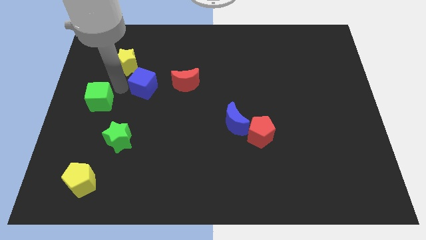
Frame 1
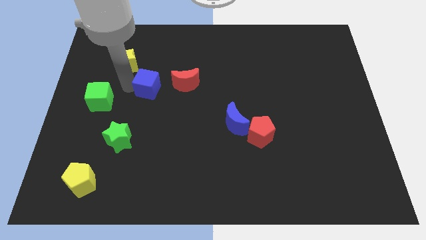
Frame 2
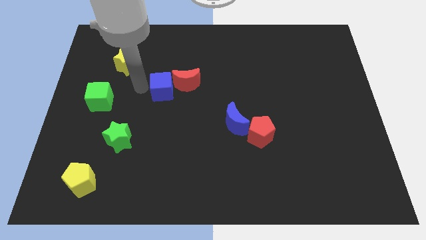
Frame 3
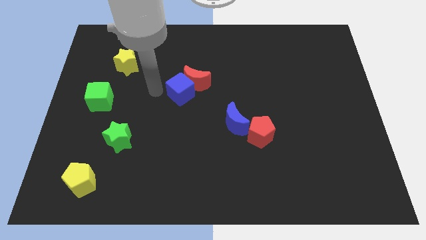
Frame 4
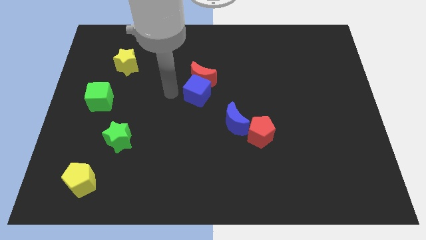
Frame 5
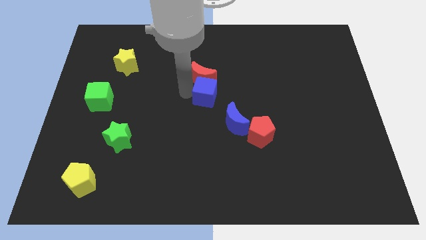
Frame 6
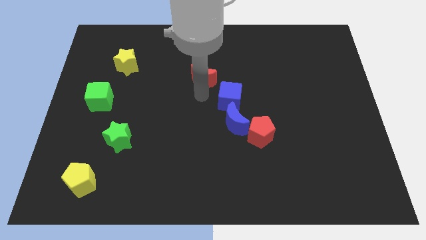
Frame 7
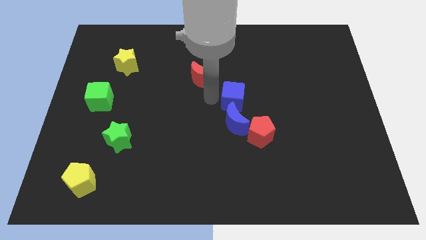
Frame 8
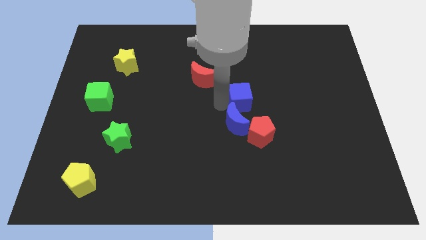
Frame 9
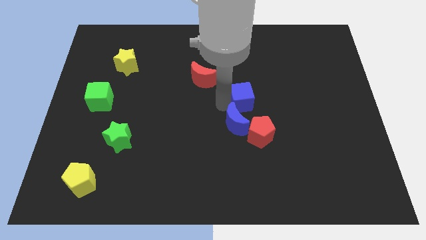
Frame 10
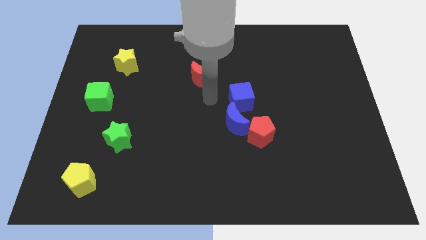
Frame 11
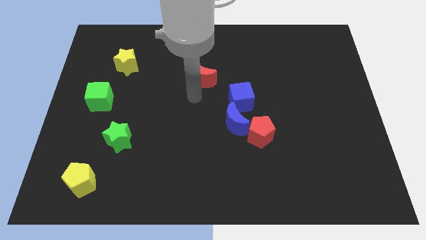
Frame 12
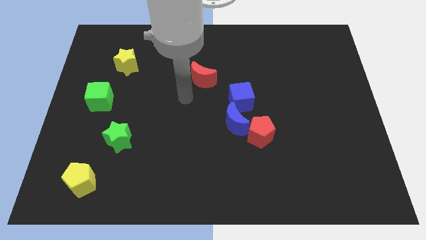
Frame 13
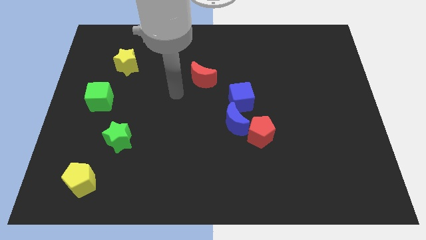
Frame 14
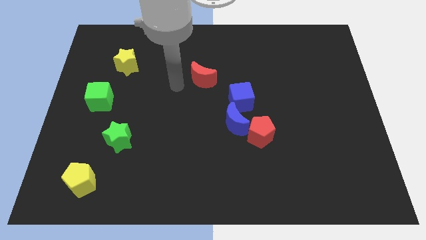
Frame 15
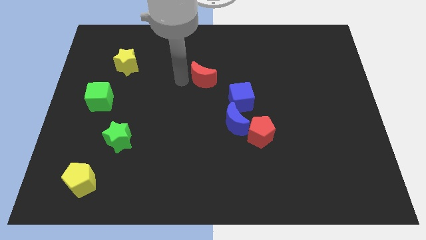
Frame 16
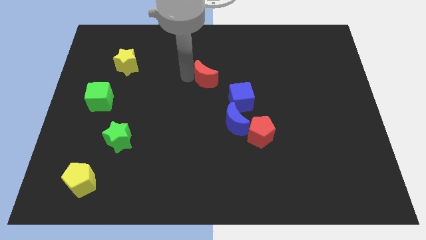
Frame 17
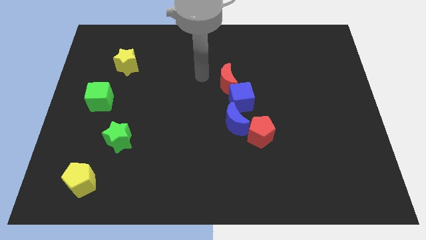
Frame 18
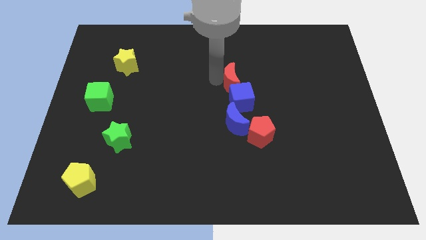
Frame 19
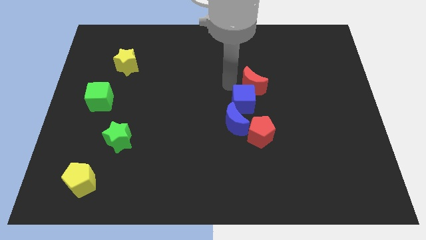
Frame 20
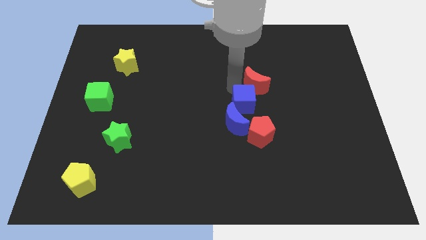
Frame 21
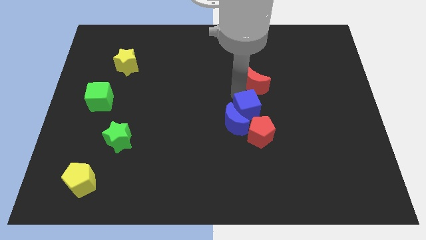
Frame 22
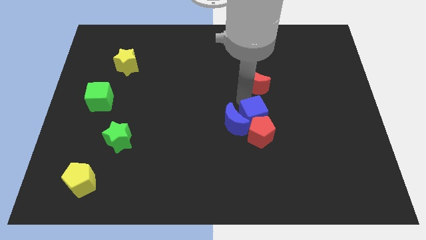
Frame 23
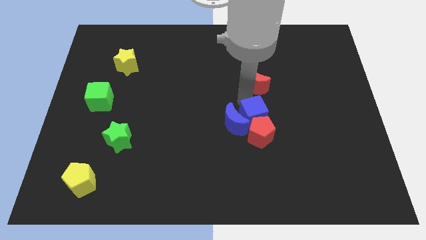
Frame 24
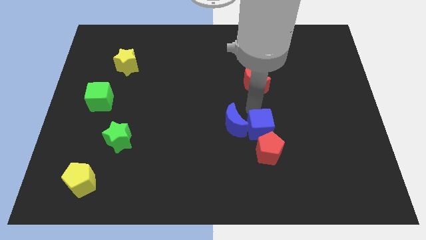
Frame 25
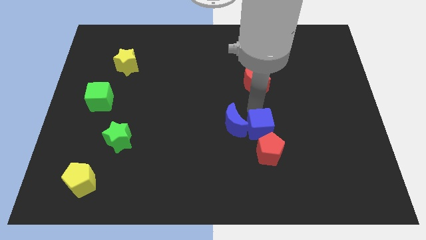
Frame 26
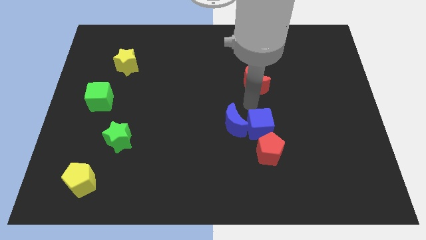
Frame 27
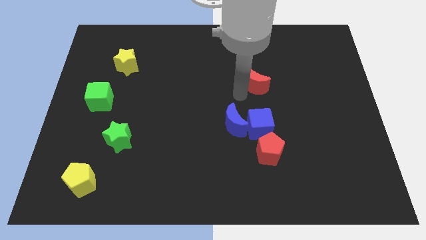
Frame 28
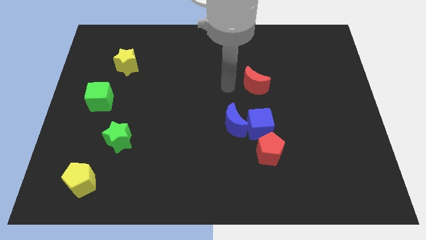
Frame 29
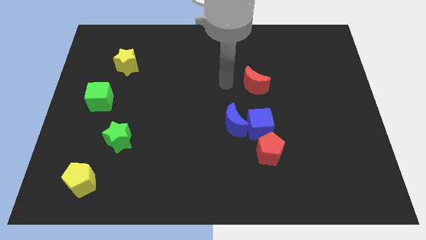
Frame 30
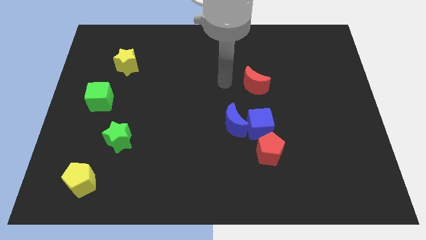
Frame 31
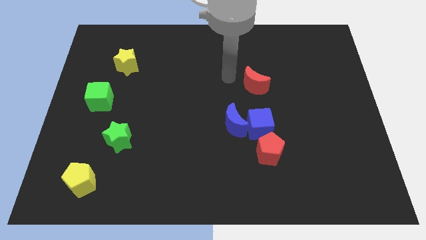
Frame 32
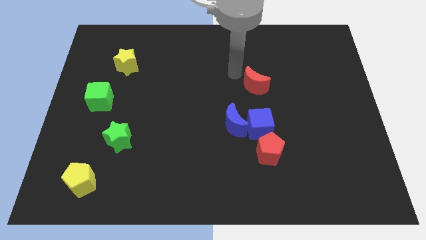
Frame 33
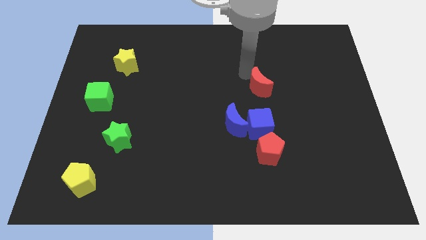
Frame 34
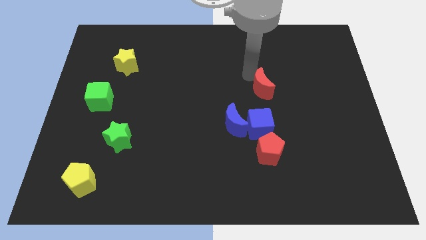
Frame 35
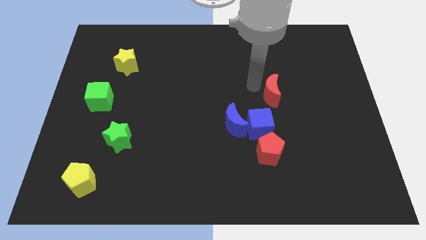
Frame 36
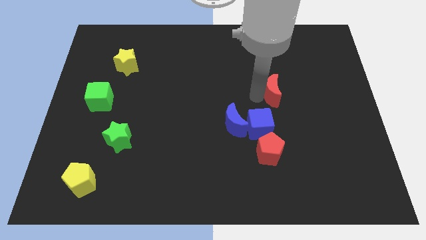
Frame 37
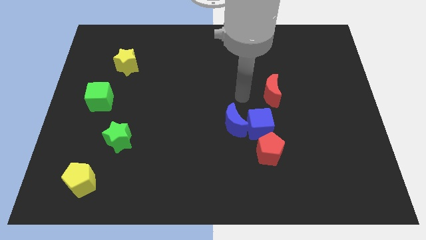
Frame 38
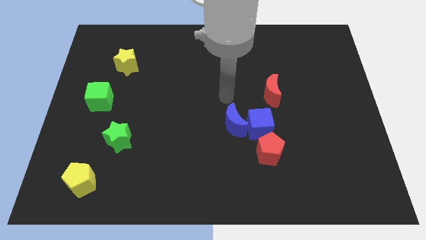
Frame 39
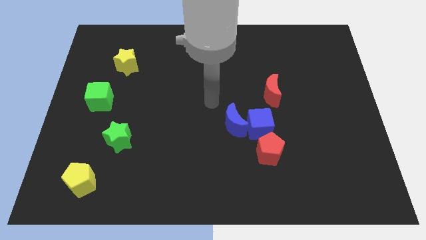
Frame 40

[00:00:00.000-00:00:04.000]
push red and blue blocks to form a group

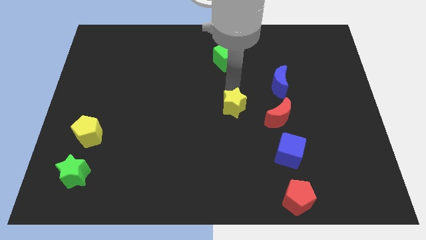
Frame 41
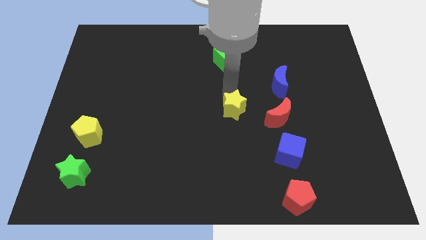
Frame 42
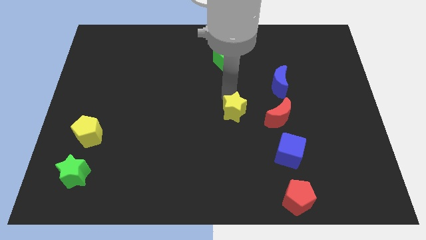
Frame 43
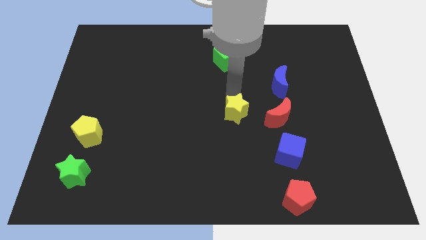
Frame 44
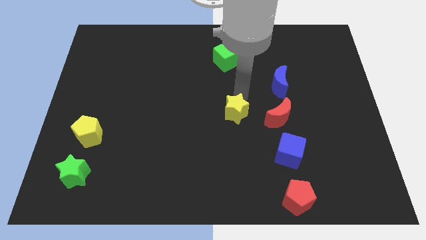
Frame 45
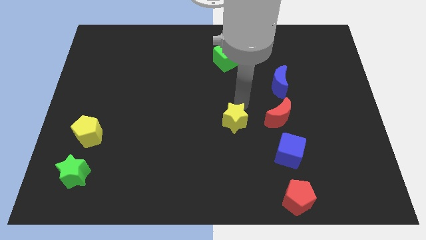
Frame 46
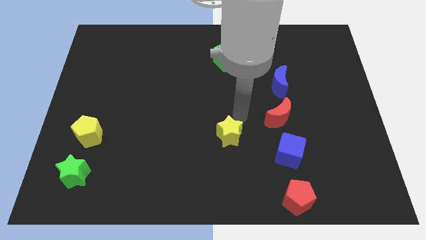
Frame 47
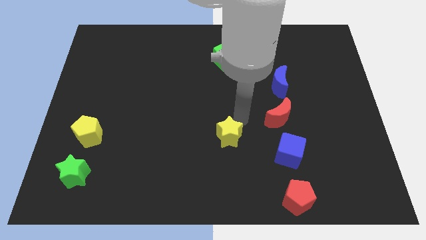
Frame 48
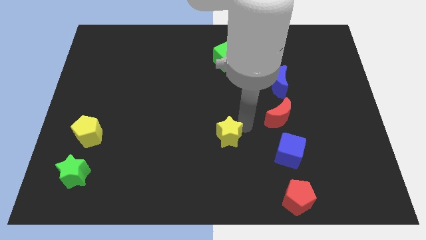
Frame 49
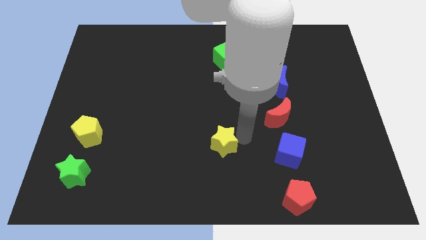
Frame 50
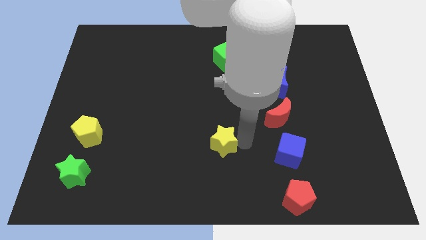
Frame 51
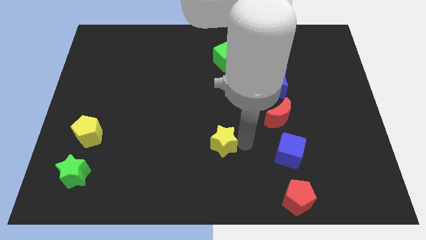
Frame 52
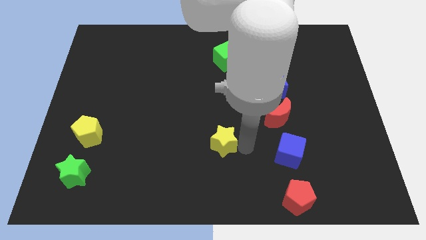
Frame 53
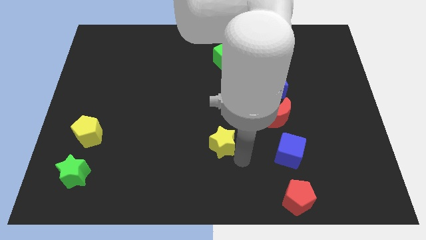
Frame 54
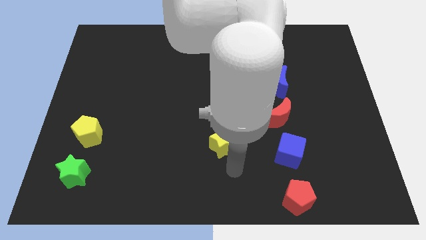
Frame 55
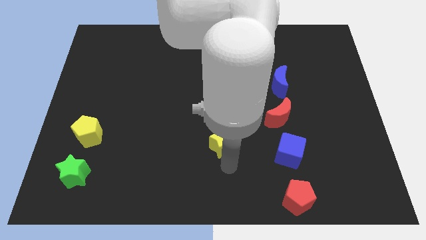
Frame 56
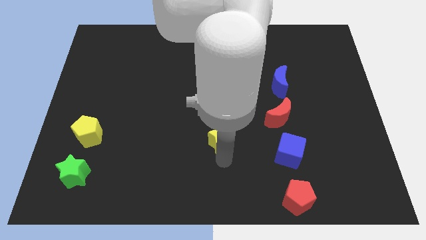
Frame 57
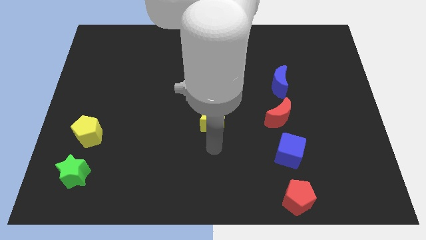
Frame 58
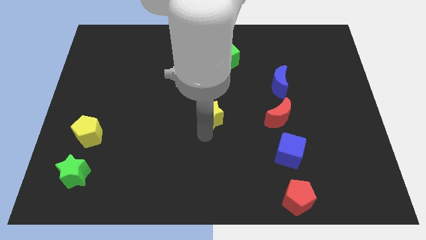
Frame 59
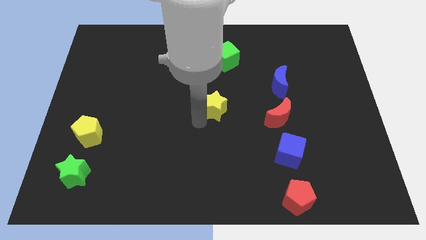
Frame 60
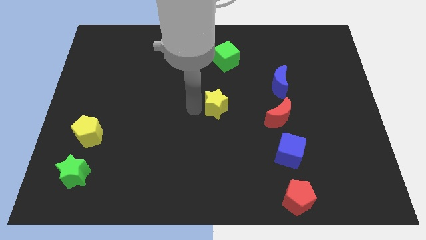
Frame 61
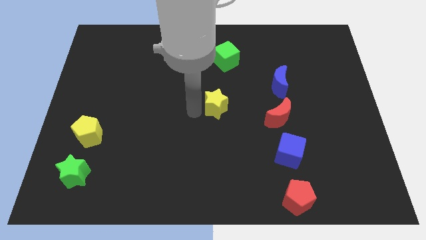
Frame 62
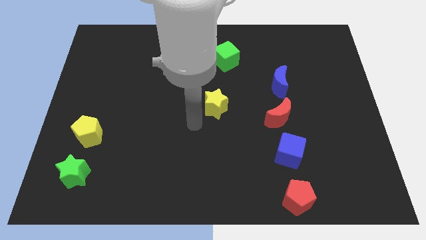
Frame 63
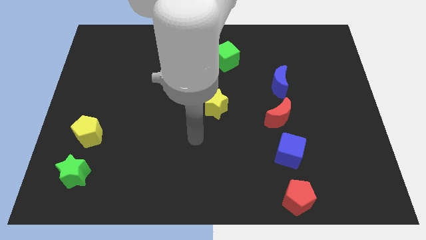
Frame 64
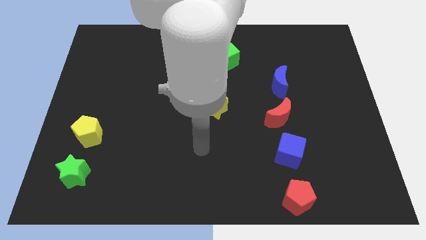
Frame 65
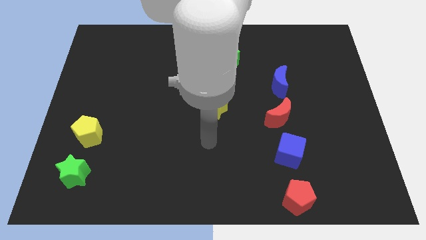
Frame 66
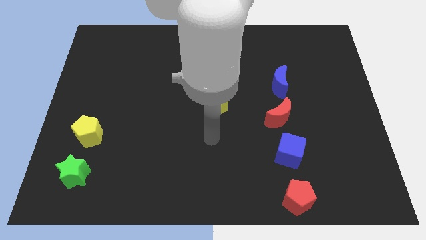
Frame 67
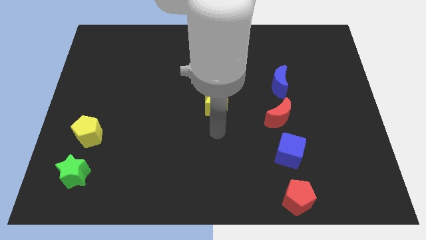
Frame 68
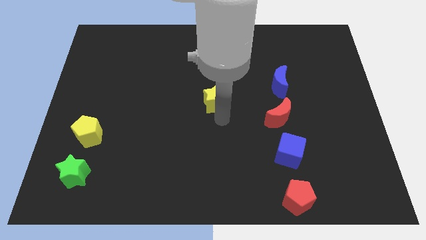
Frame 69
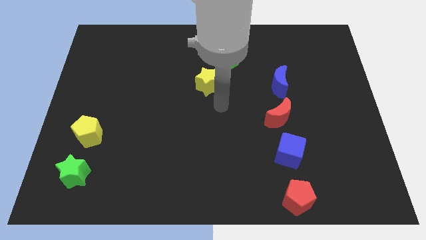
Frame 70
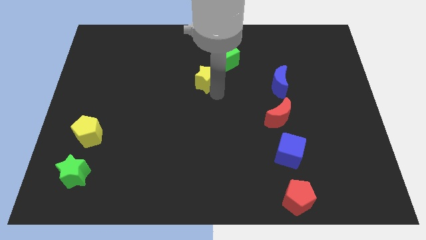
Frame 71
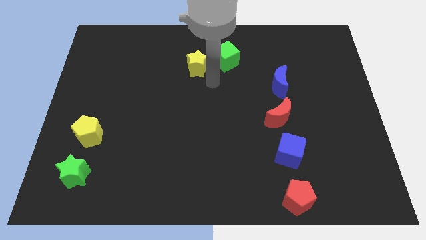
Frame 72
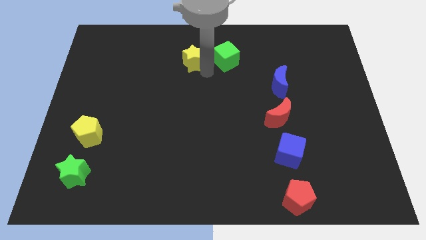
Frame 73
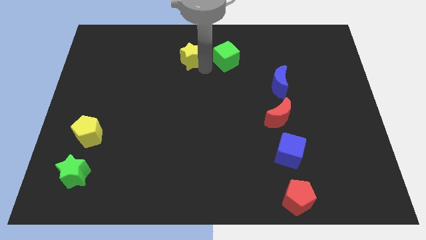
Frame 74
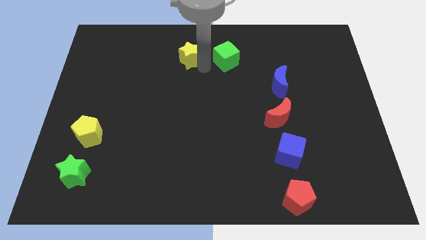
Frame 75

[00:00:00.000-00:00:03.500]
push the yellow star to the left of the green cube

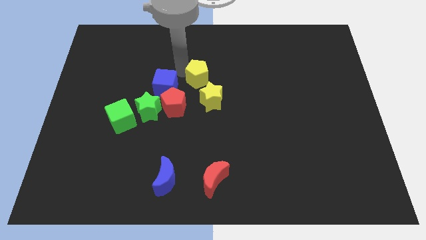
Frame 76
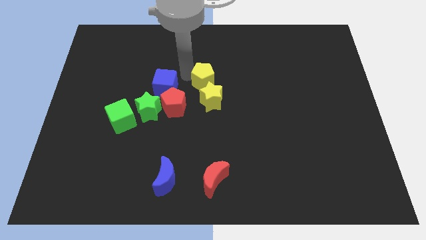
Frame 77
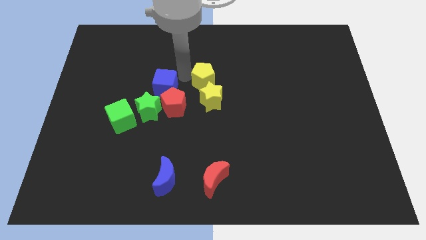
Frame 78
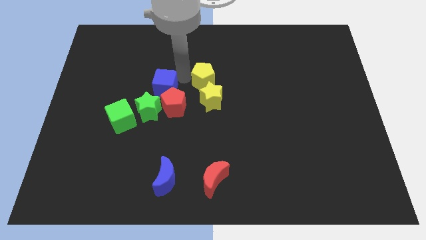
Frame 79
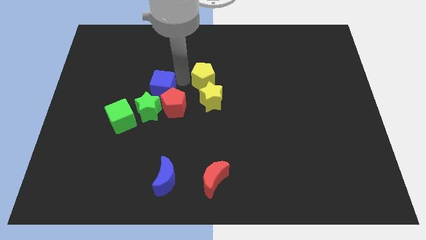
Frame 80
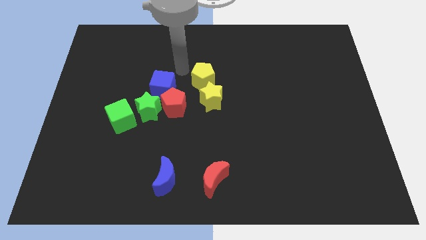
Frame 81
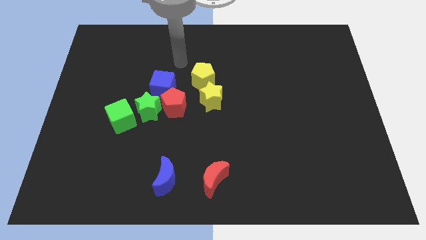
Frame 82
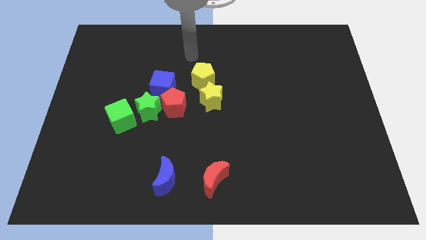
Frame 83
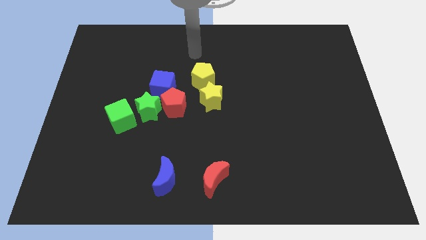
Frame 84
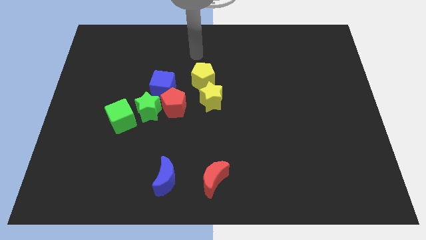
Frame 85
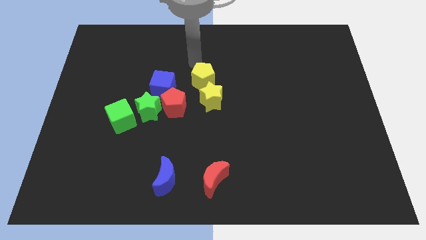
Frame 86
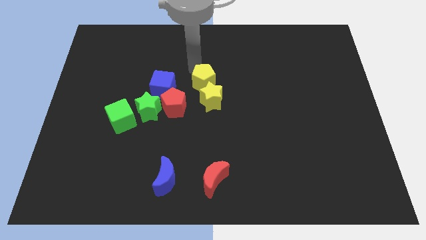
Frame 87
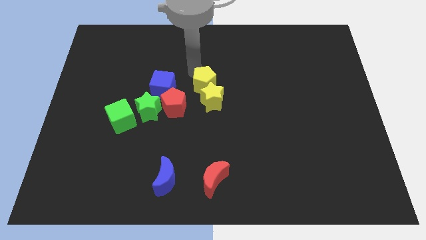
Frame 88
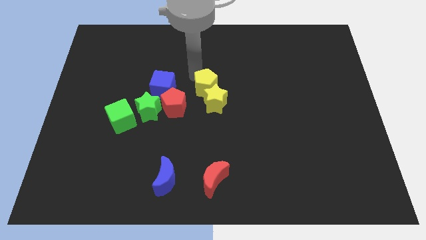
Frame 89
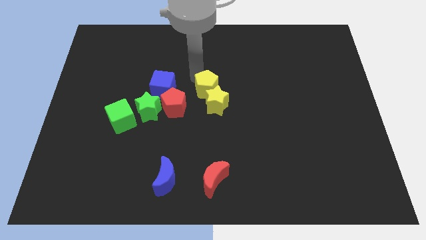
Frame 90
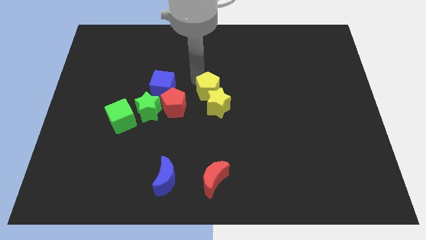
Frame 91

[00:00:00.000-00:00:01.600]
move the yellow pentagon into the yellow star
